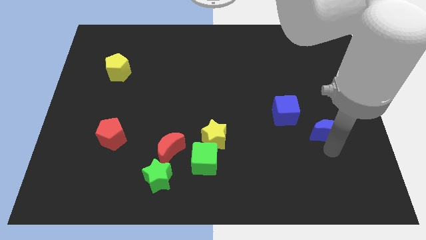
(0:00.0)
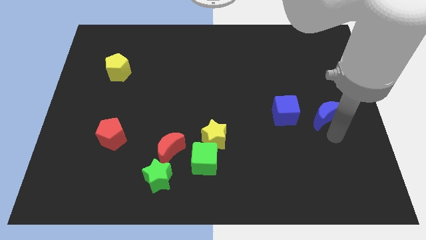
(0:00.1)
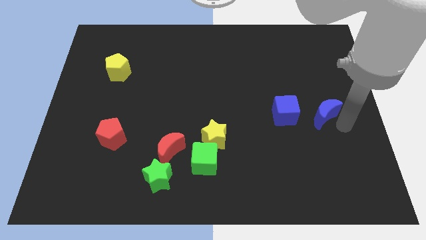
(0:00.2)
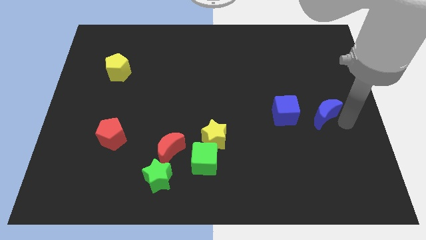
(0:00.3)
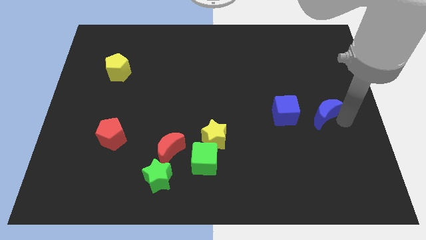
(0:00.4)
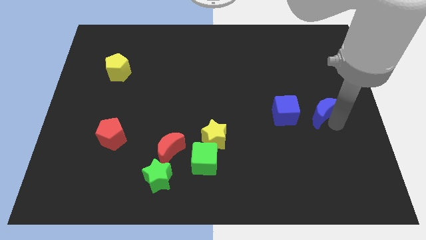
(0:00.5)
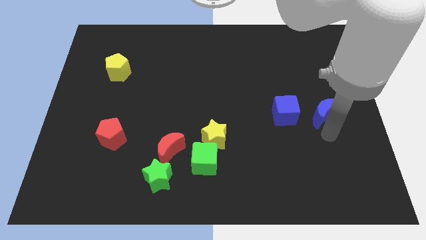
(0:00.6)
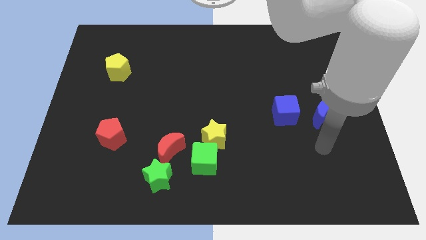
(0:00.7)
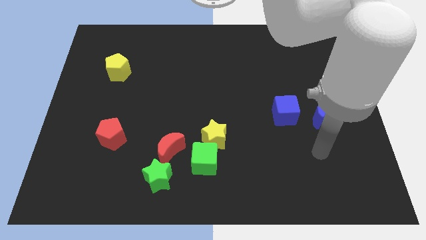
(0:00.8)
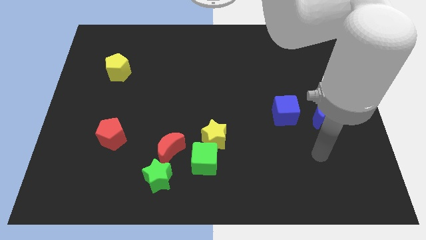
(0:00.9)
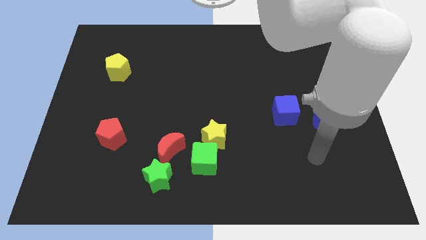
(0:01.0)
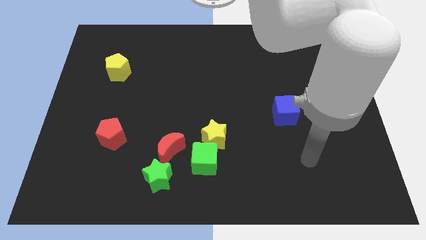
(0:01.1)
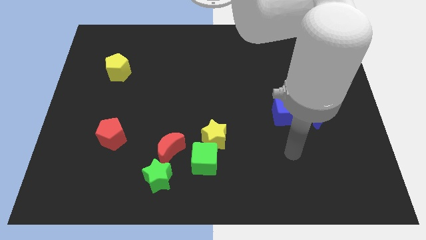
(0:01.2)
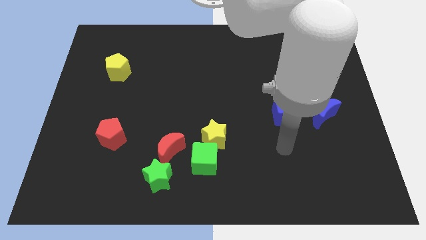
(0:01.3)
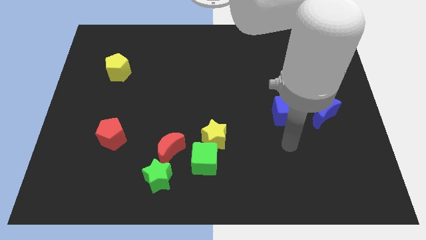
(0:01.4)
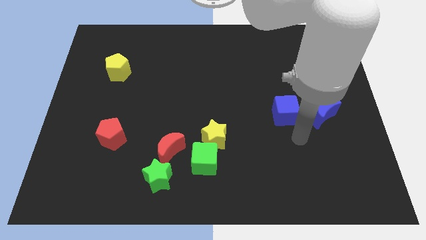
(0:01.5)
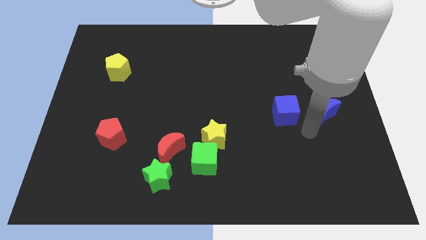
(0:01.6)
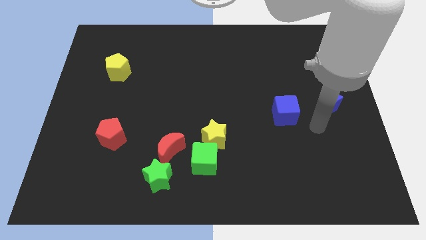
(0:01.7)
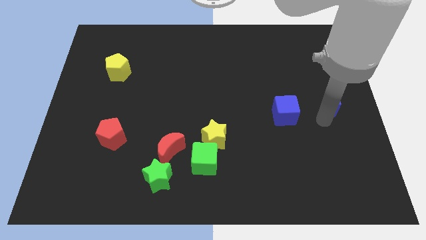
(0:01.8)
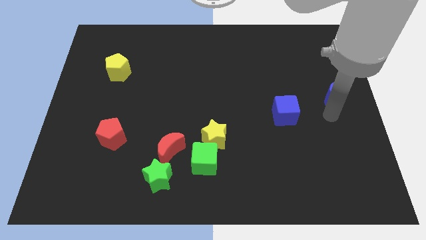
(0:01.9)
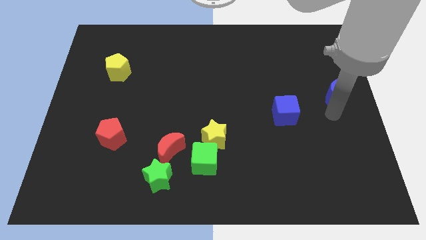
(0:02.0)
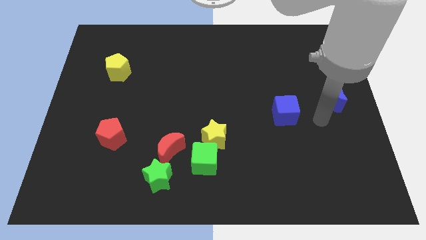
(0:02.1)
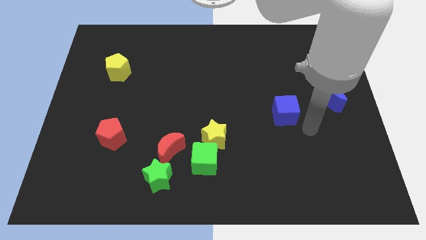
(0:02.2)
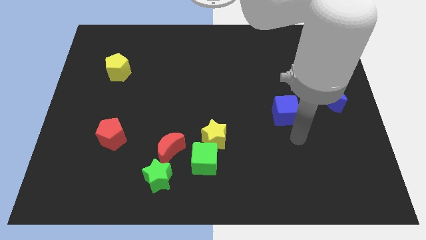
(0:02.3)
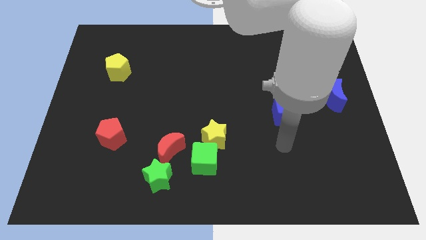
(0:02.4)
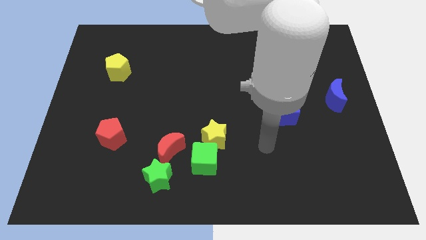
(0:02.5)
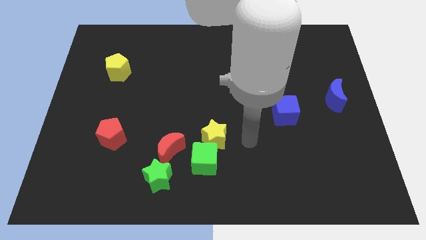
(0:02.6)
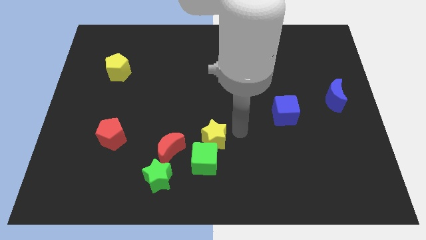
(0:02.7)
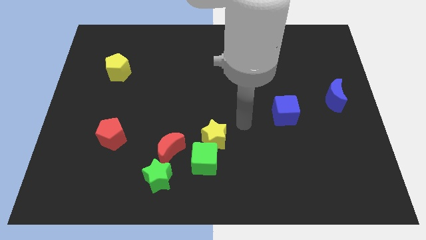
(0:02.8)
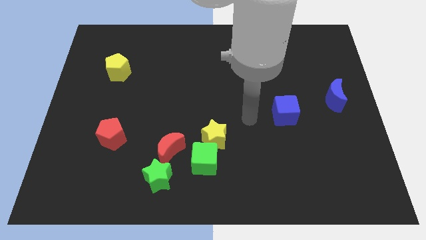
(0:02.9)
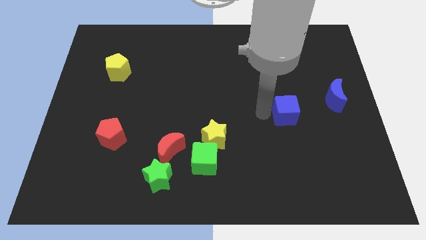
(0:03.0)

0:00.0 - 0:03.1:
push the blue moon towards the top right side of the blue cube

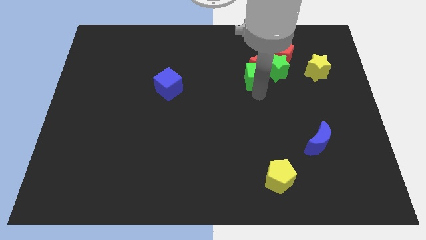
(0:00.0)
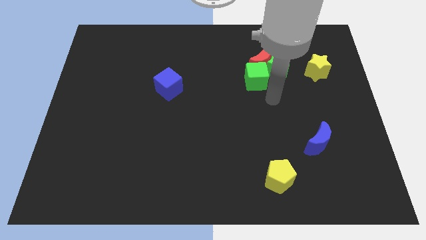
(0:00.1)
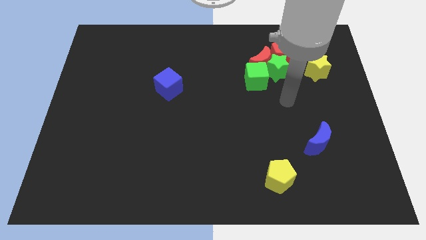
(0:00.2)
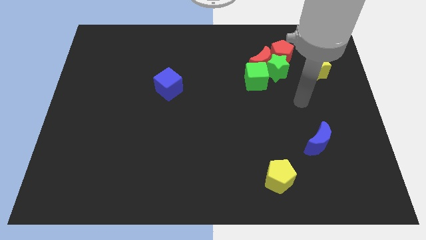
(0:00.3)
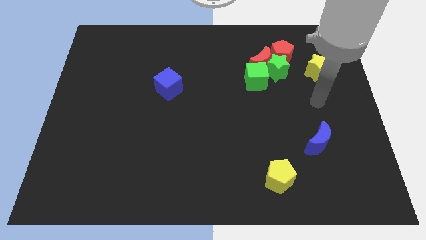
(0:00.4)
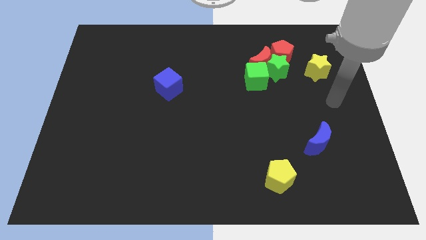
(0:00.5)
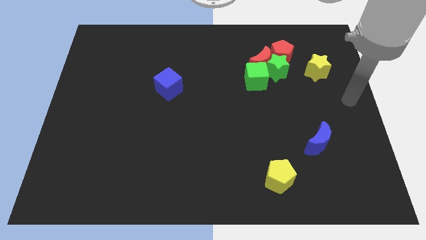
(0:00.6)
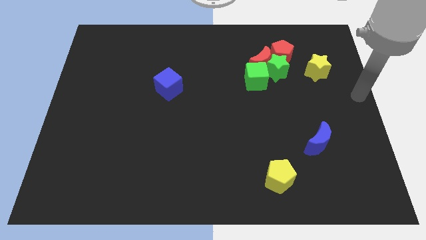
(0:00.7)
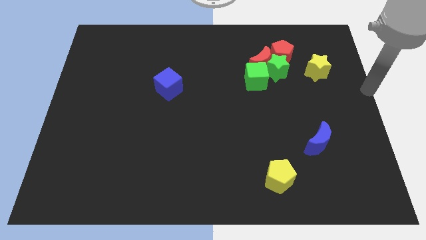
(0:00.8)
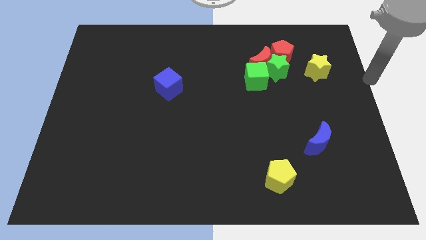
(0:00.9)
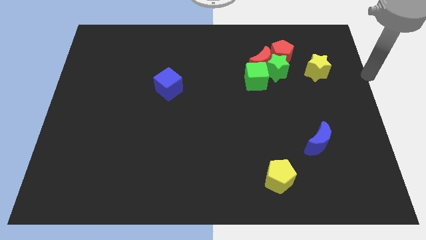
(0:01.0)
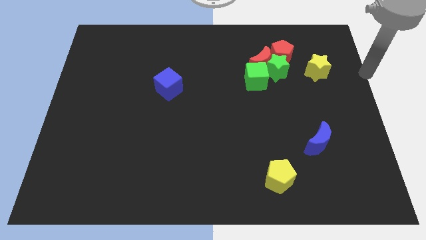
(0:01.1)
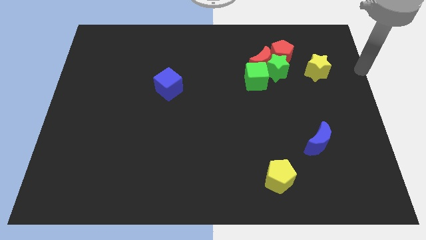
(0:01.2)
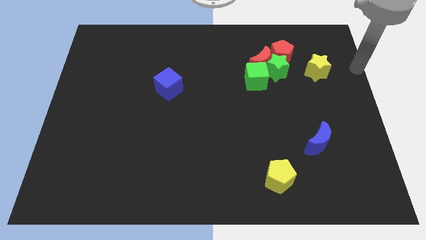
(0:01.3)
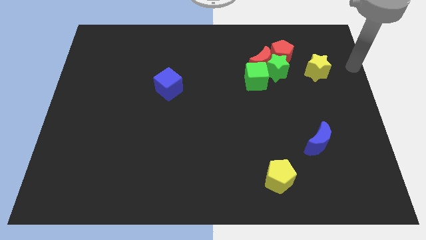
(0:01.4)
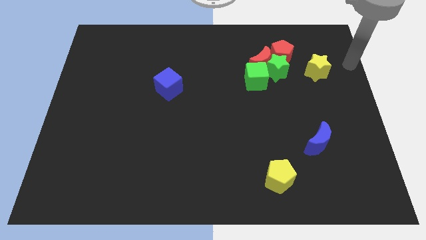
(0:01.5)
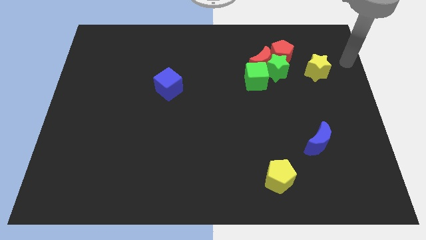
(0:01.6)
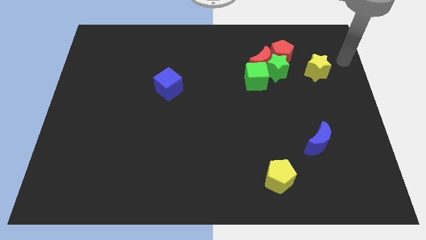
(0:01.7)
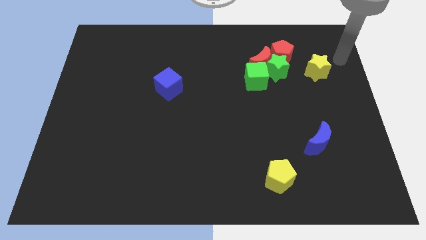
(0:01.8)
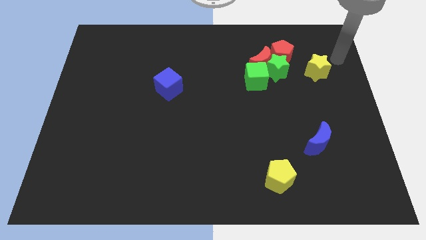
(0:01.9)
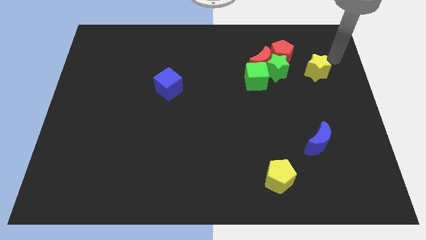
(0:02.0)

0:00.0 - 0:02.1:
move your arm to the right side of the yellow star

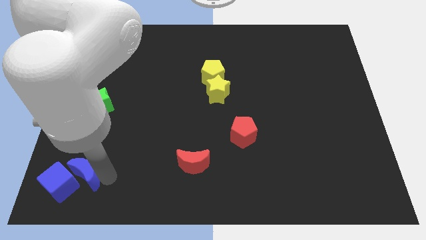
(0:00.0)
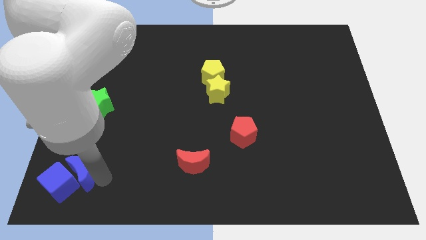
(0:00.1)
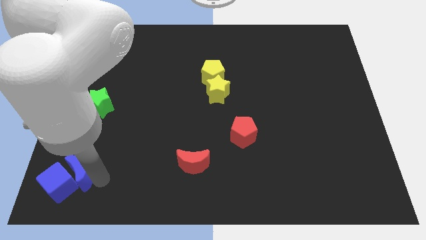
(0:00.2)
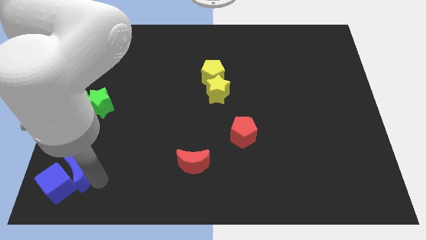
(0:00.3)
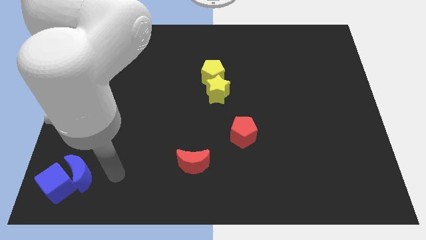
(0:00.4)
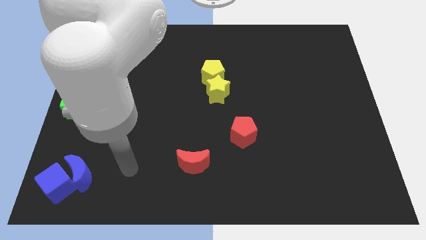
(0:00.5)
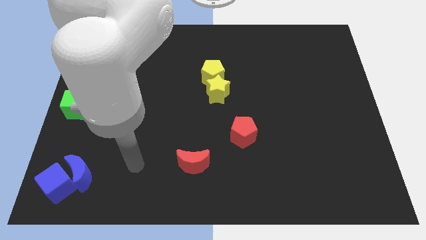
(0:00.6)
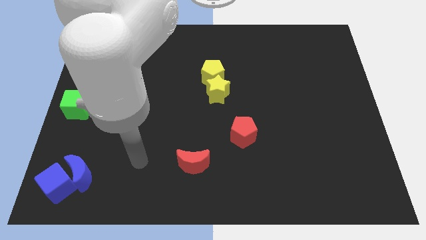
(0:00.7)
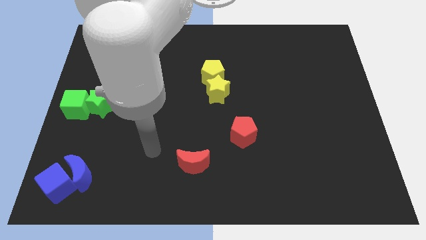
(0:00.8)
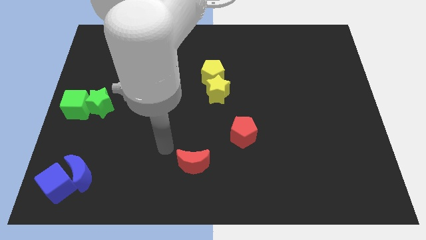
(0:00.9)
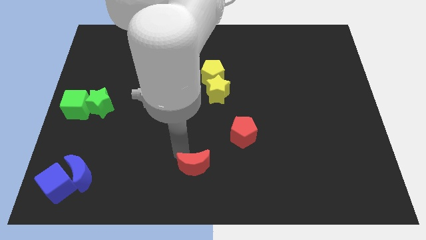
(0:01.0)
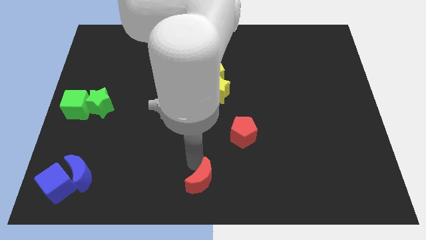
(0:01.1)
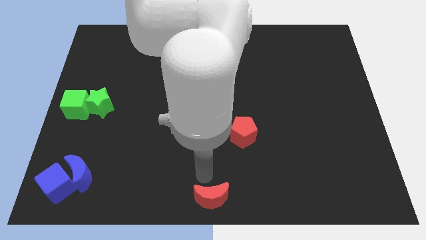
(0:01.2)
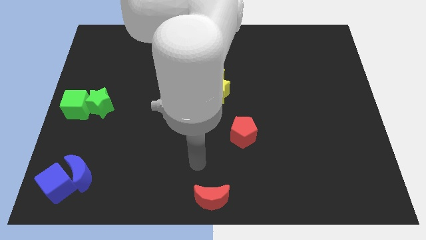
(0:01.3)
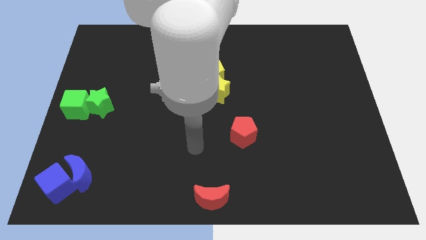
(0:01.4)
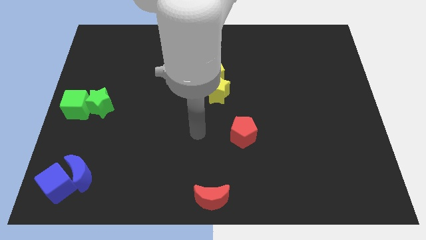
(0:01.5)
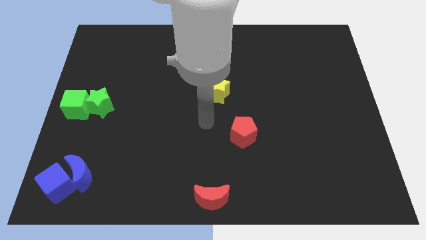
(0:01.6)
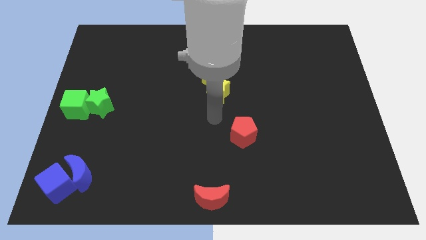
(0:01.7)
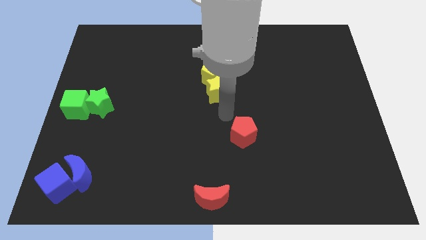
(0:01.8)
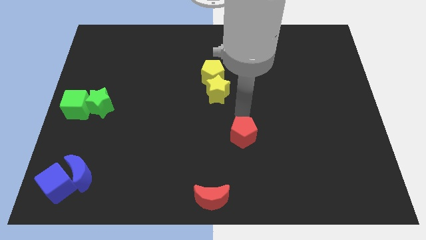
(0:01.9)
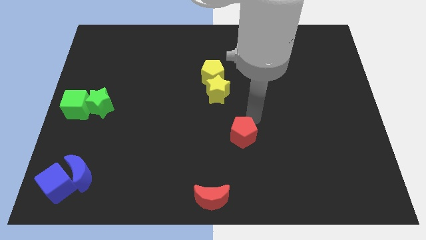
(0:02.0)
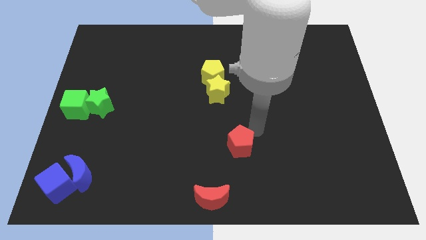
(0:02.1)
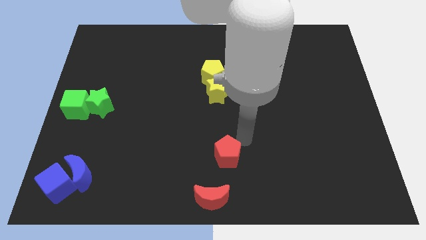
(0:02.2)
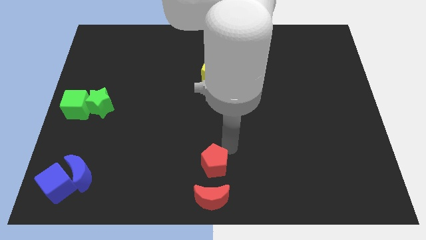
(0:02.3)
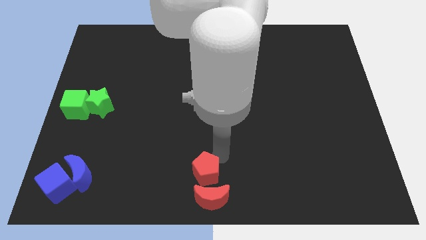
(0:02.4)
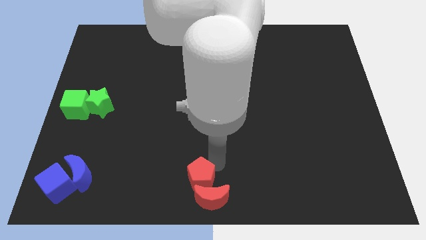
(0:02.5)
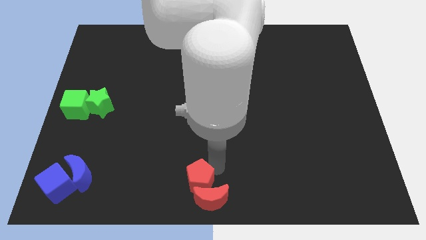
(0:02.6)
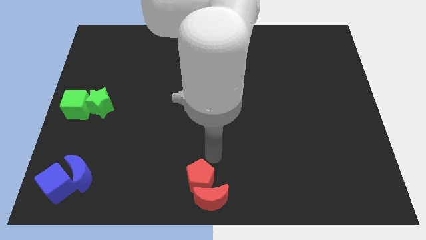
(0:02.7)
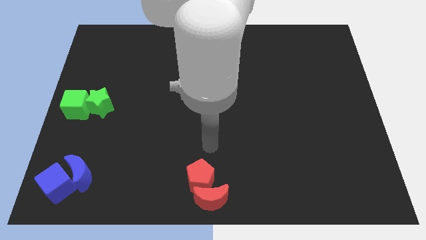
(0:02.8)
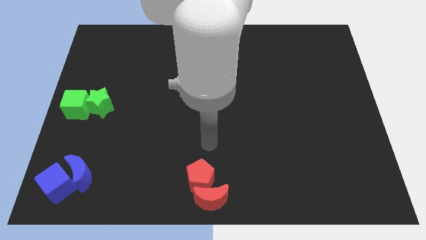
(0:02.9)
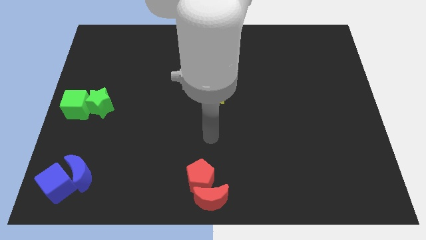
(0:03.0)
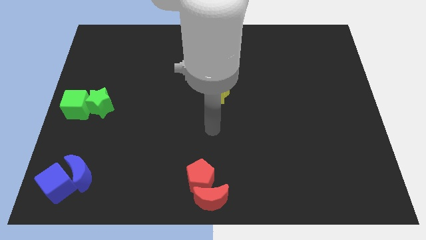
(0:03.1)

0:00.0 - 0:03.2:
move the red blocks to the bottom center of the board

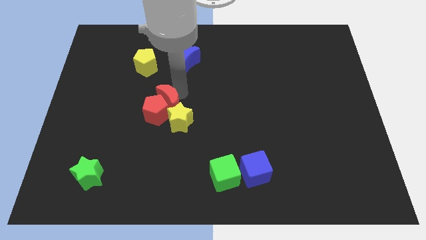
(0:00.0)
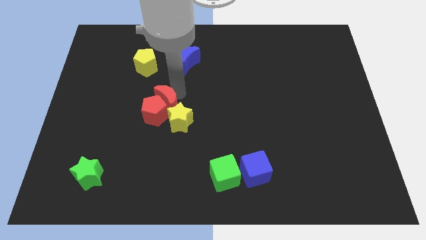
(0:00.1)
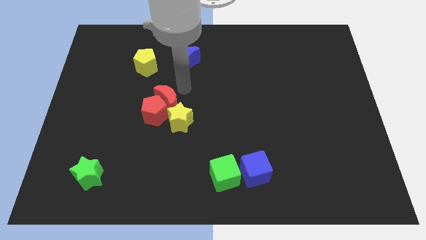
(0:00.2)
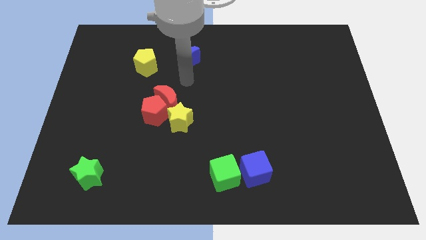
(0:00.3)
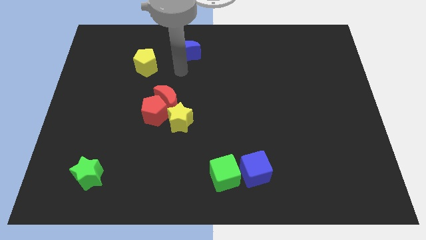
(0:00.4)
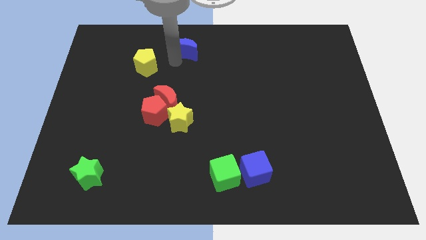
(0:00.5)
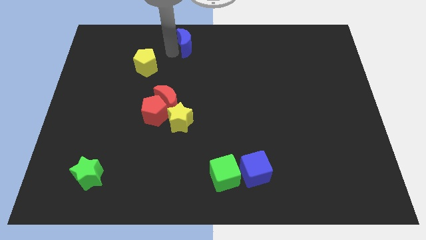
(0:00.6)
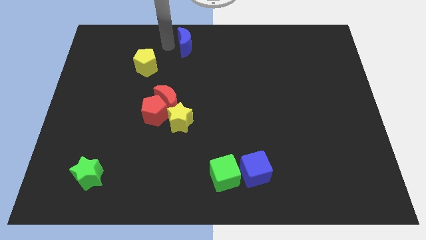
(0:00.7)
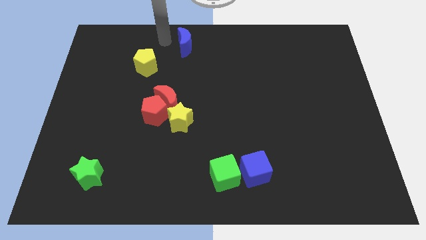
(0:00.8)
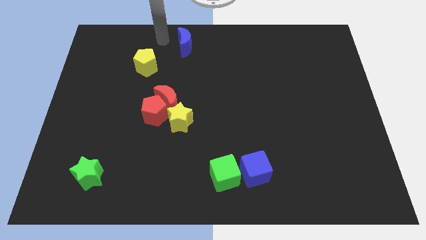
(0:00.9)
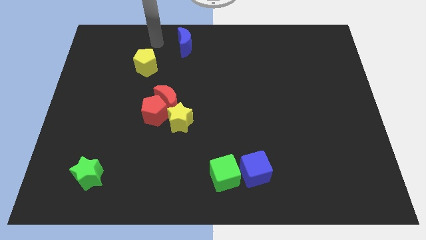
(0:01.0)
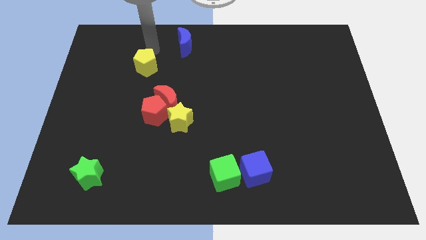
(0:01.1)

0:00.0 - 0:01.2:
move the blue crescent towards the center top
